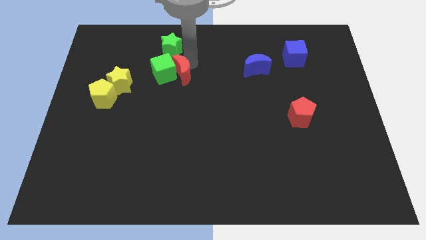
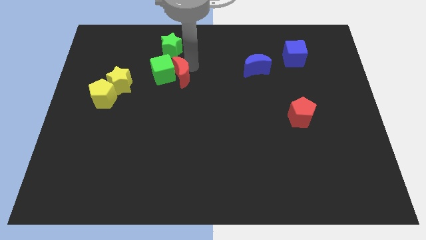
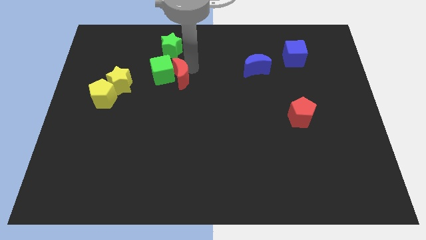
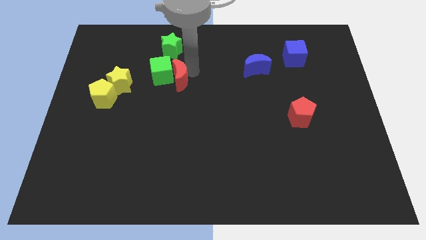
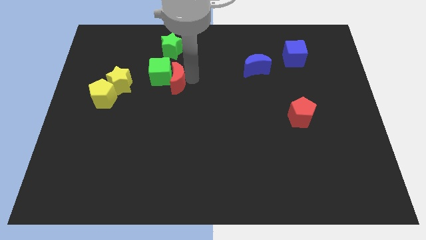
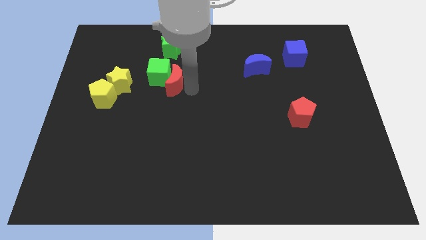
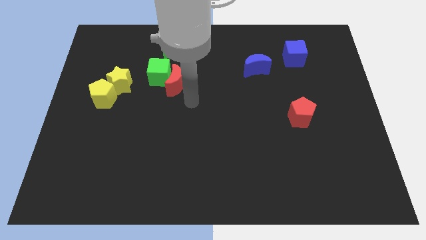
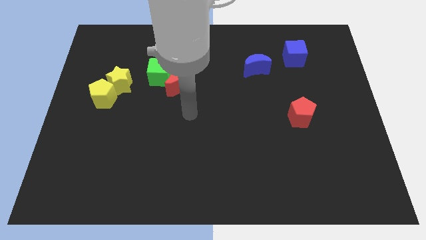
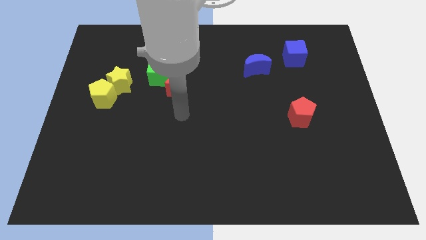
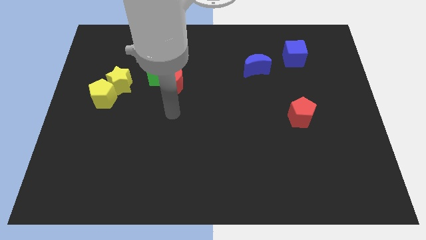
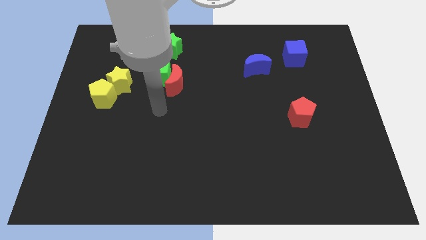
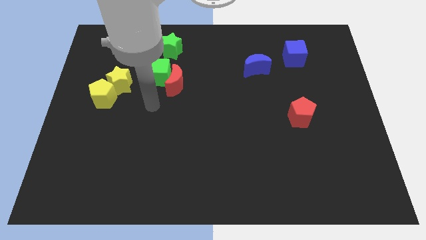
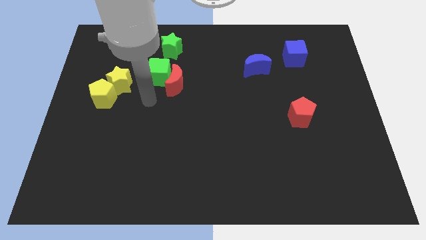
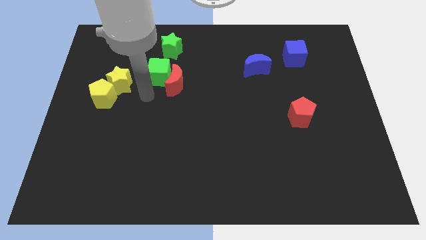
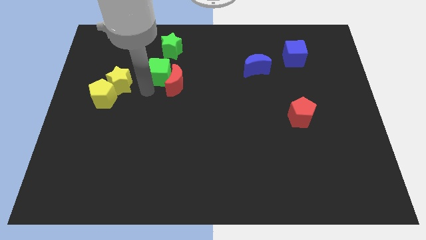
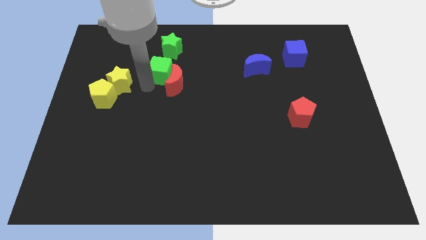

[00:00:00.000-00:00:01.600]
move the green cube below the green star

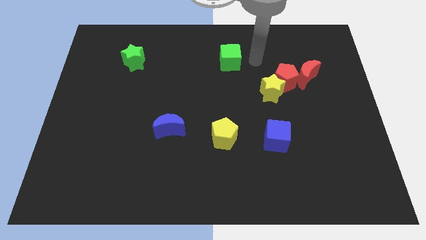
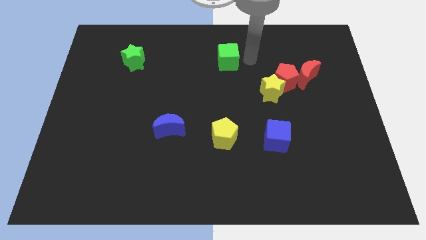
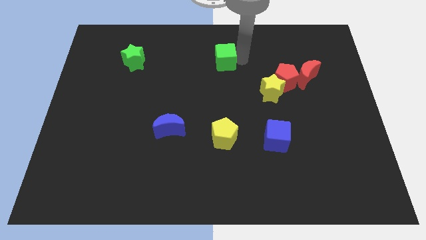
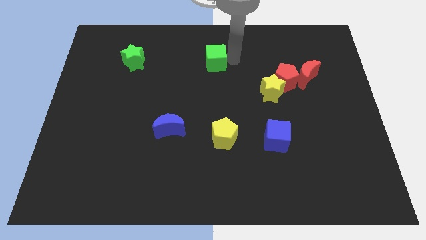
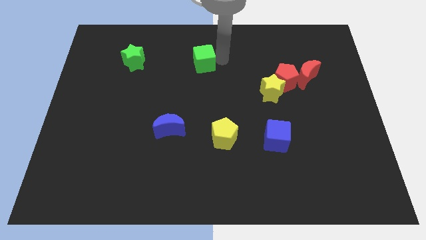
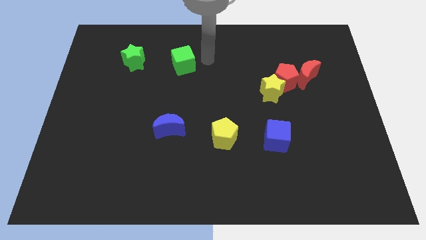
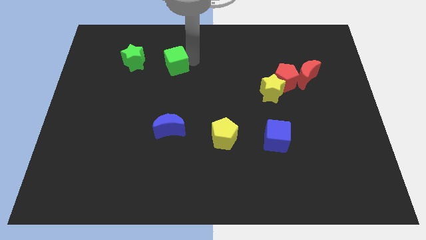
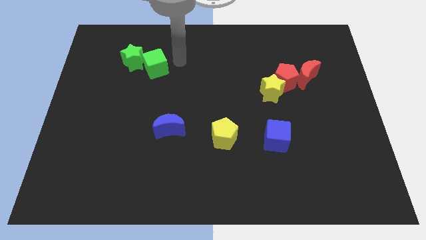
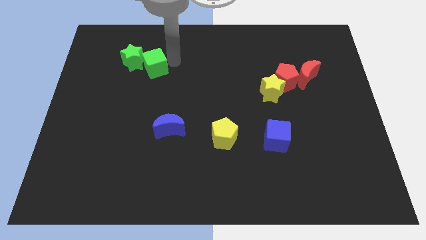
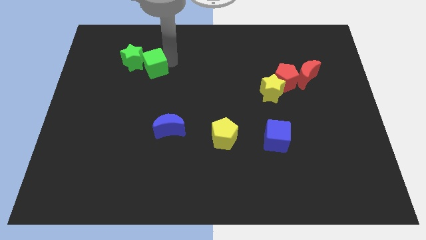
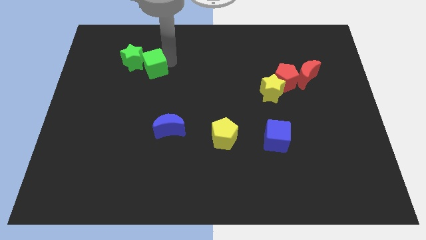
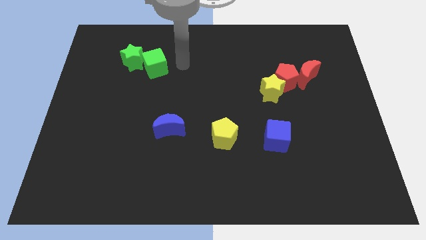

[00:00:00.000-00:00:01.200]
push the green cube into the right side of the green star

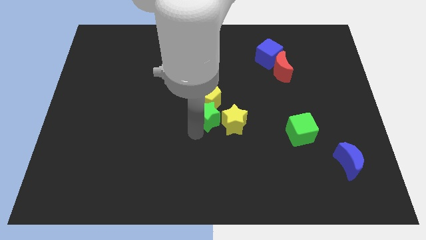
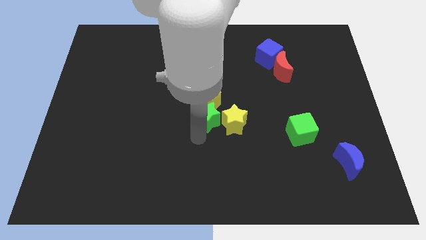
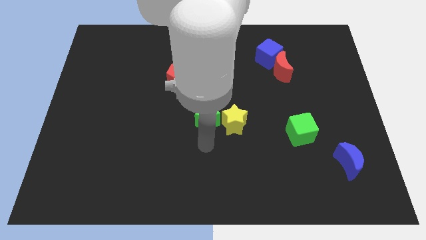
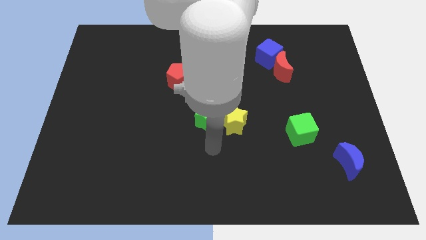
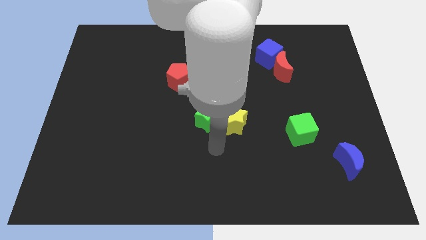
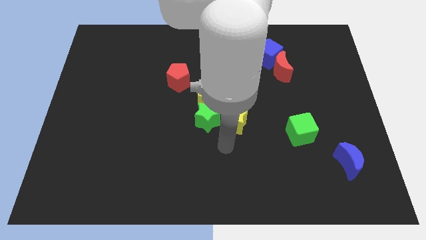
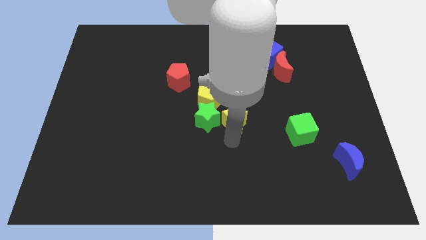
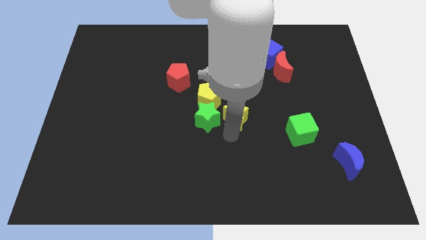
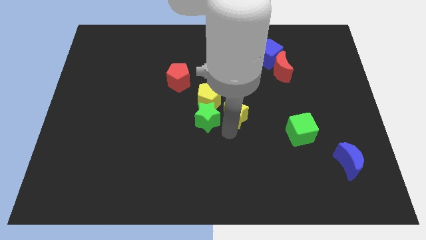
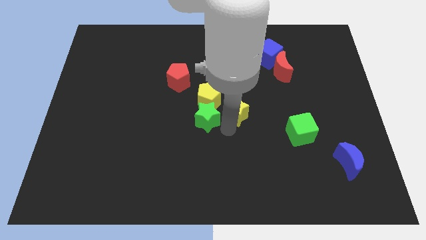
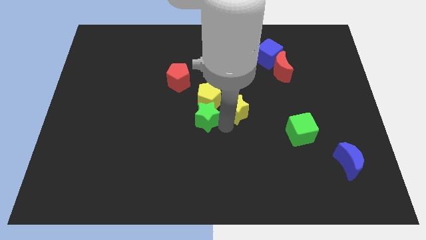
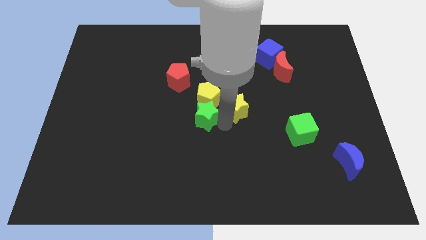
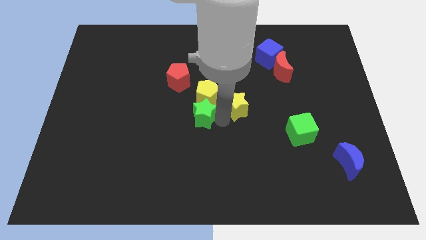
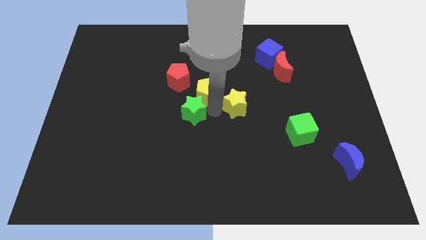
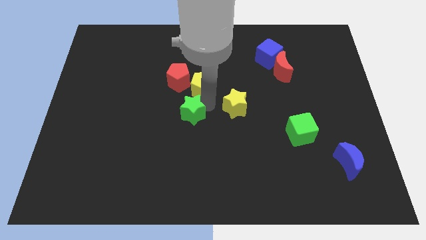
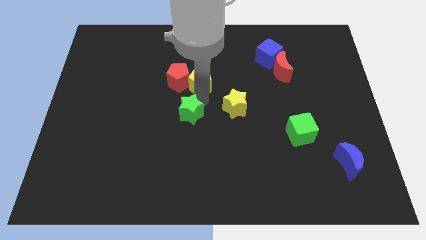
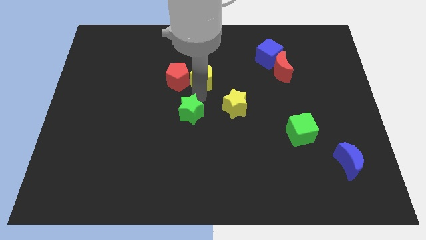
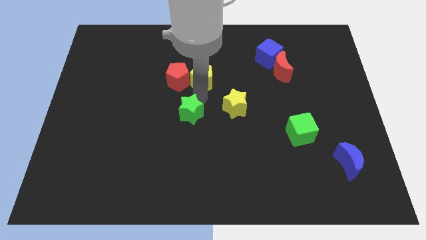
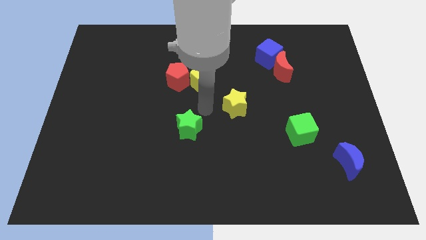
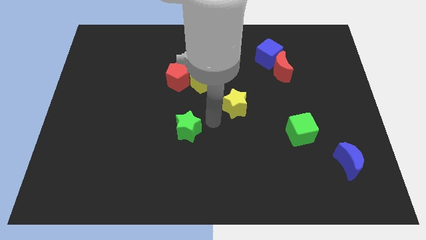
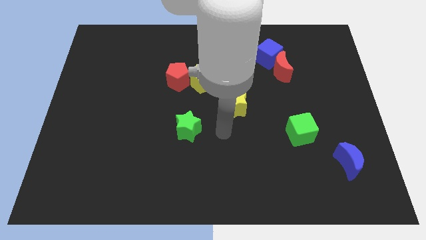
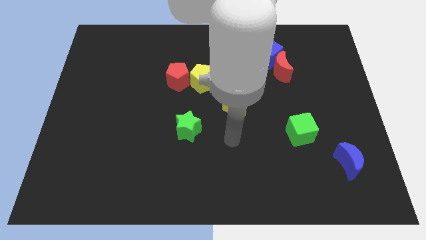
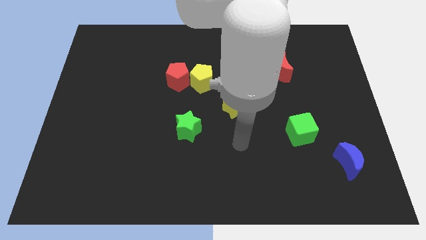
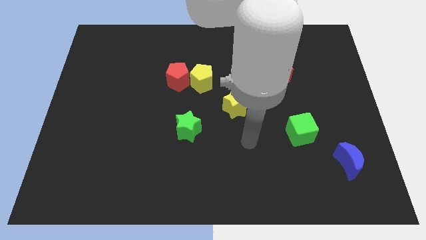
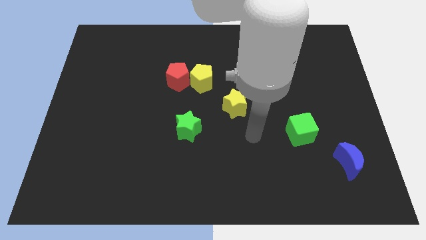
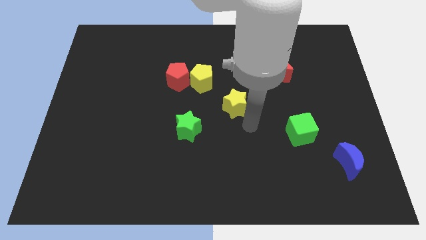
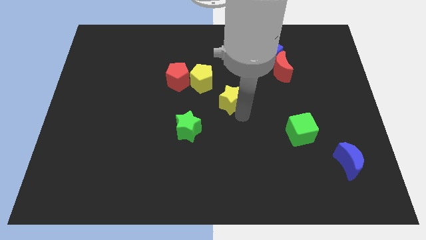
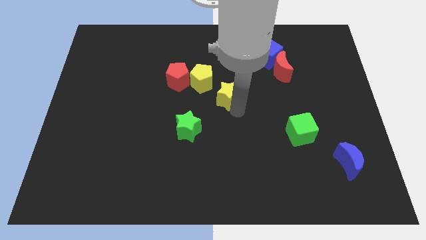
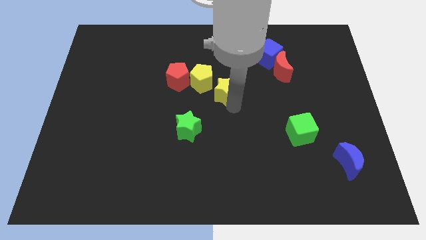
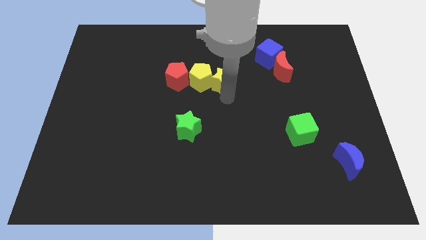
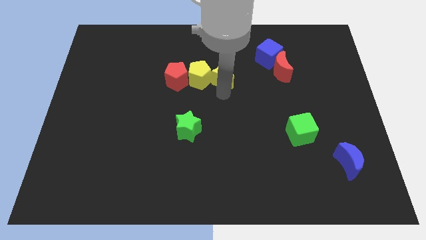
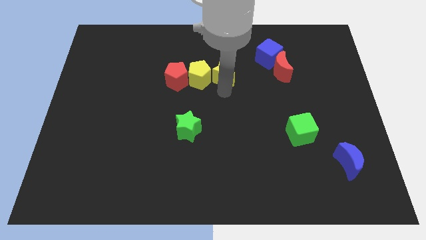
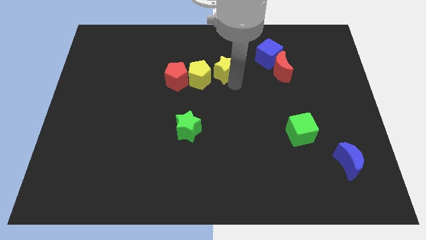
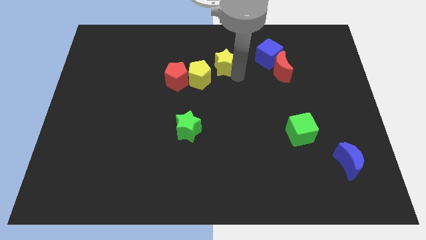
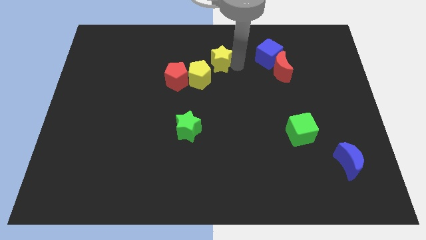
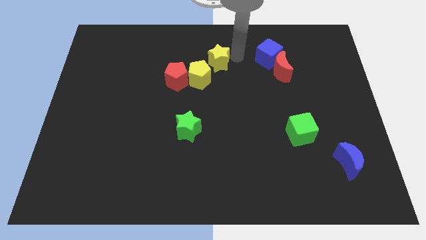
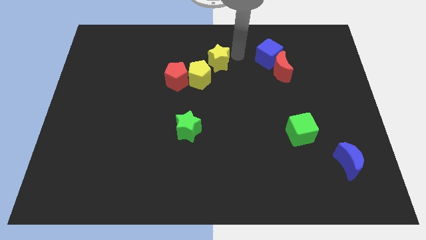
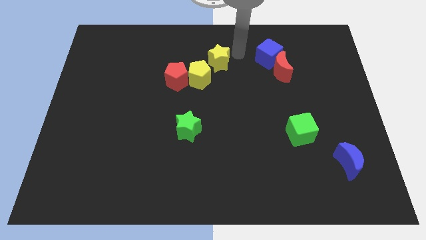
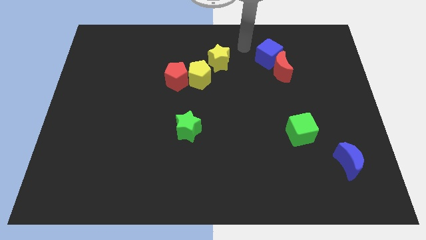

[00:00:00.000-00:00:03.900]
separate the green star and the yellow pentagon

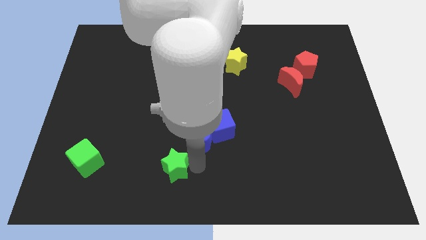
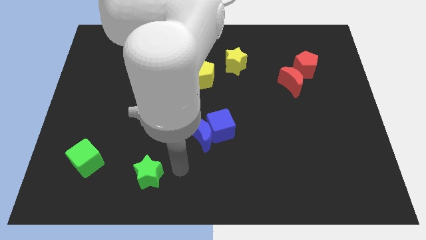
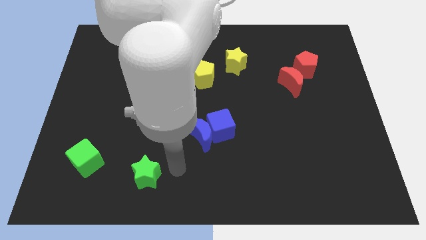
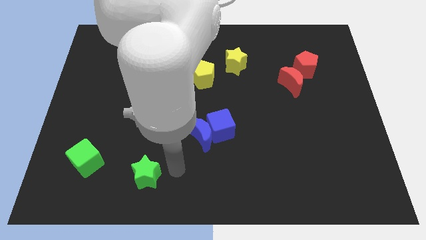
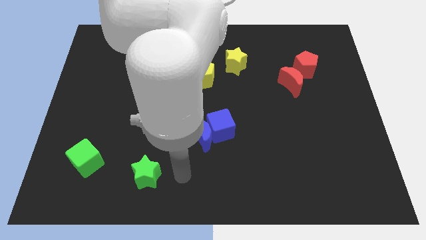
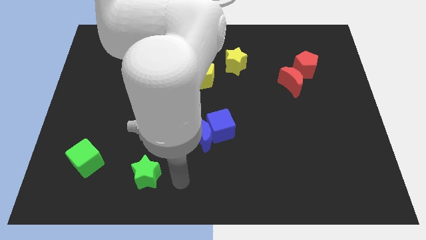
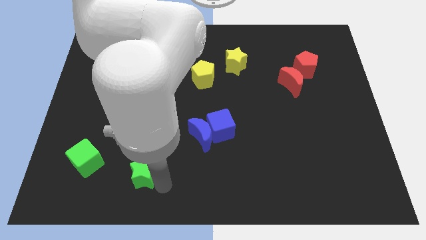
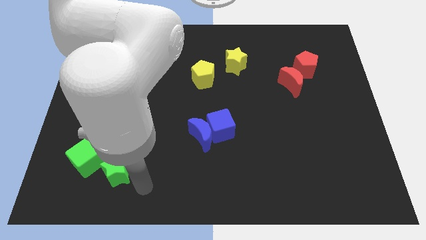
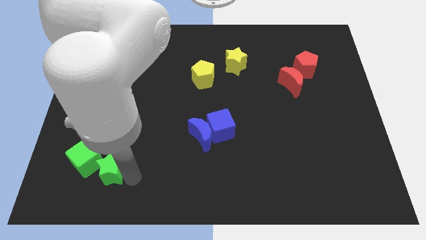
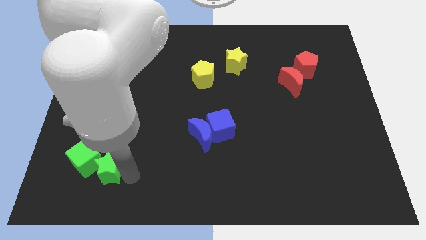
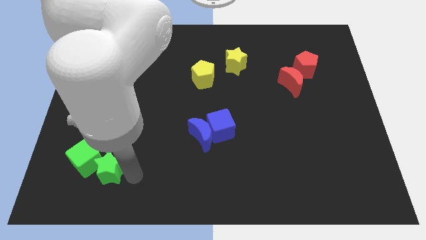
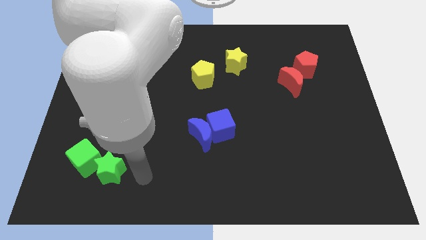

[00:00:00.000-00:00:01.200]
place the green star near to the green cube

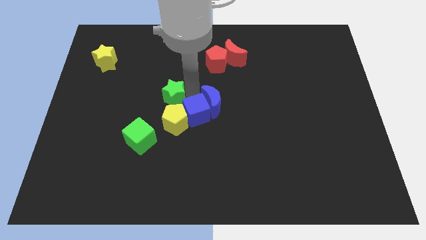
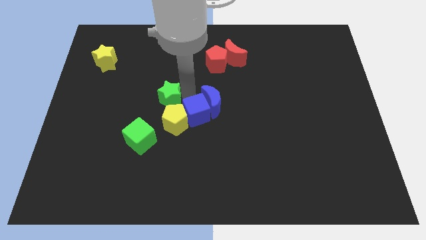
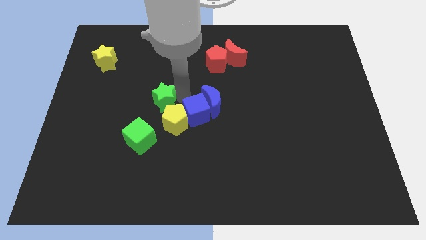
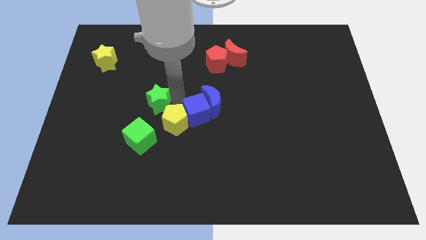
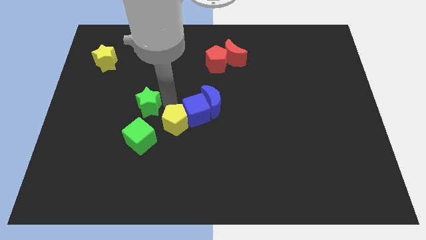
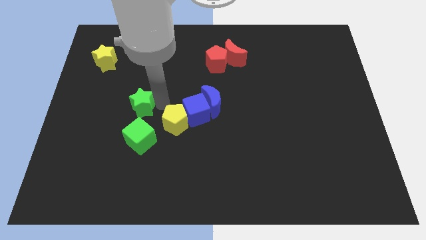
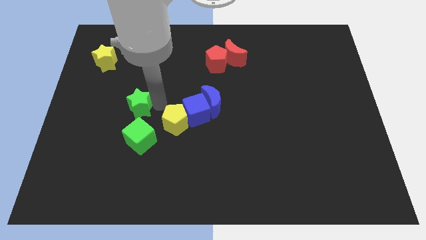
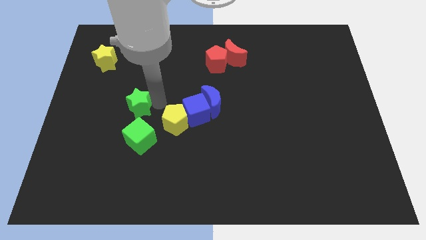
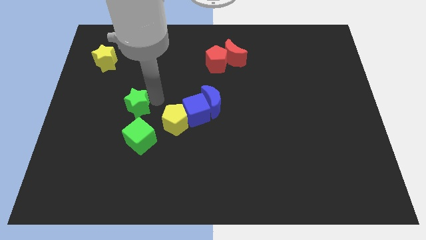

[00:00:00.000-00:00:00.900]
place green star diagonal to the yellow pentagon
